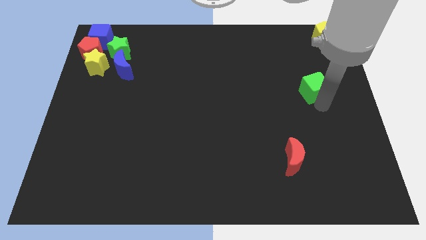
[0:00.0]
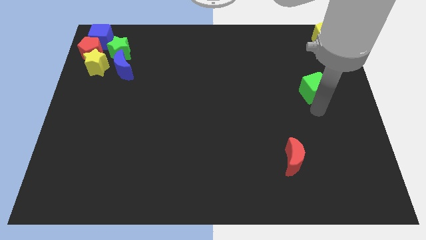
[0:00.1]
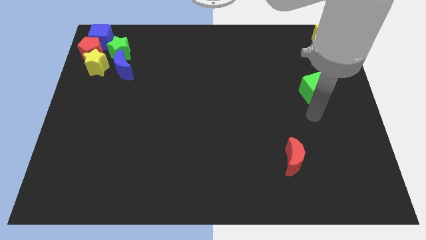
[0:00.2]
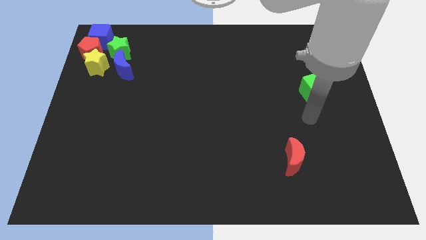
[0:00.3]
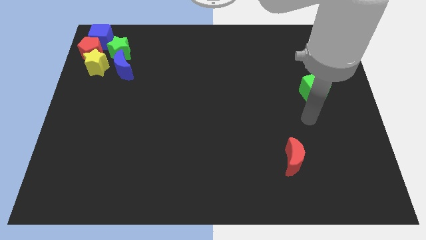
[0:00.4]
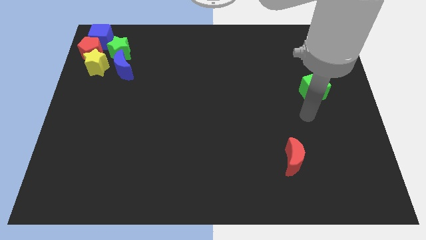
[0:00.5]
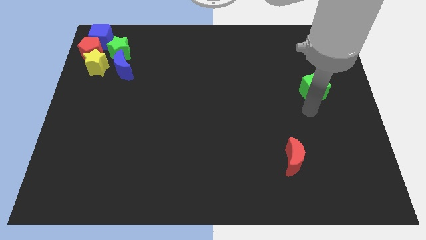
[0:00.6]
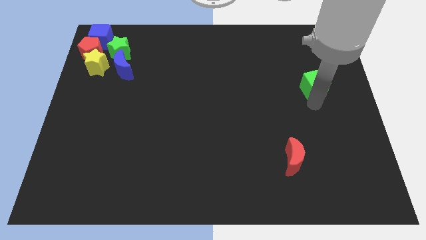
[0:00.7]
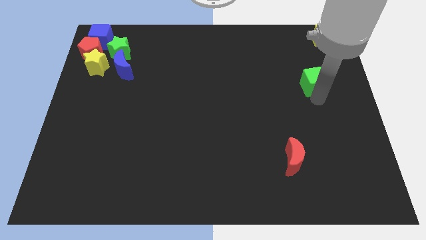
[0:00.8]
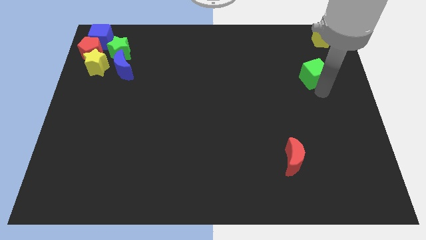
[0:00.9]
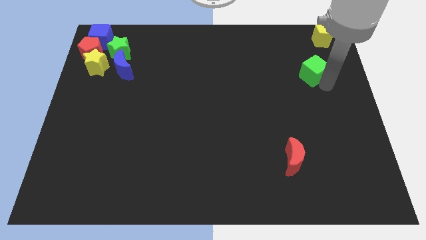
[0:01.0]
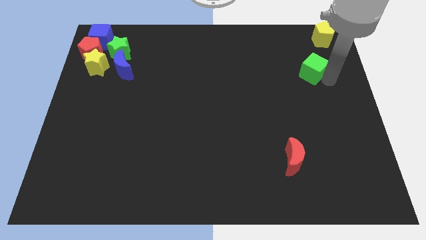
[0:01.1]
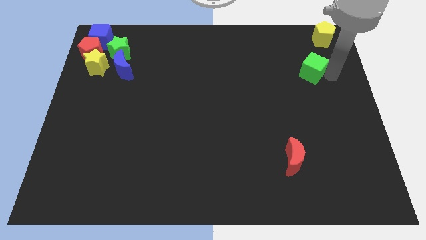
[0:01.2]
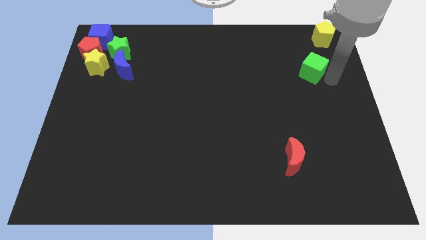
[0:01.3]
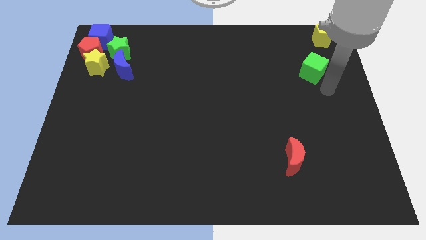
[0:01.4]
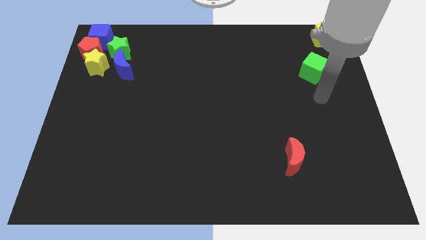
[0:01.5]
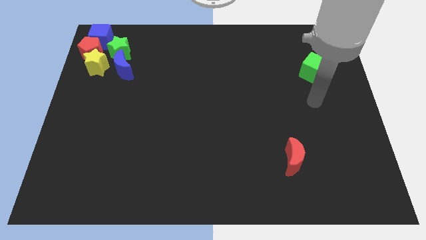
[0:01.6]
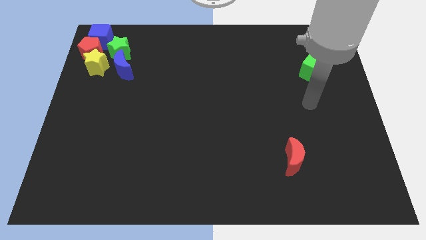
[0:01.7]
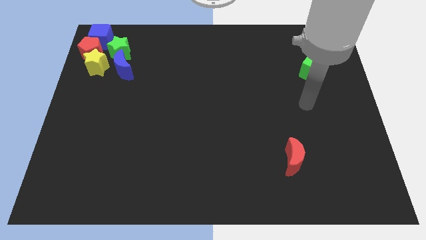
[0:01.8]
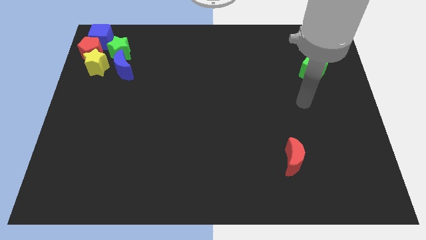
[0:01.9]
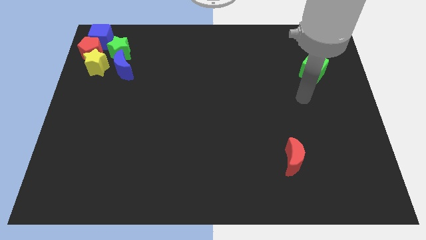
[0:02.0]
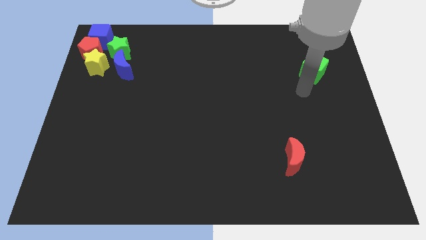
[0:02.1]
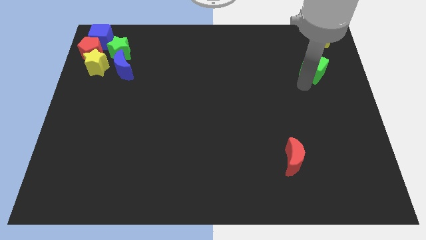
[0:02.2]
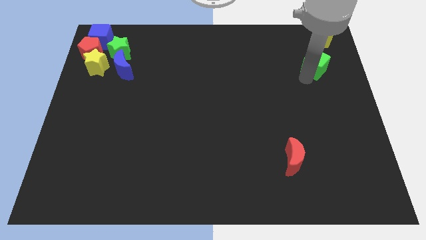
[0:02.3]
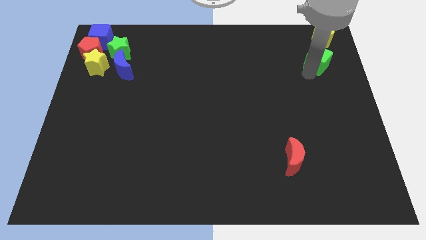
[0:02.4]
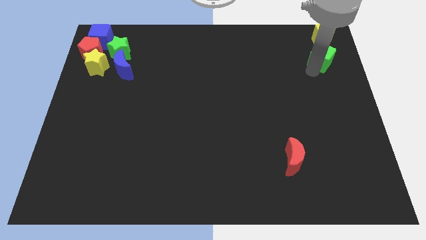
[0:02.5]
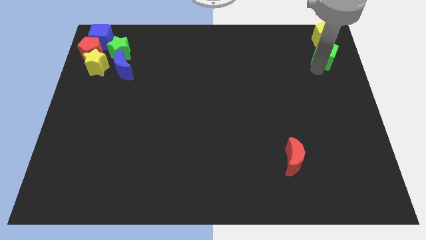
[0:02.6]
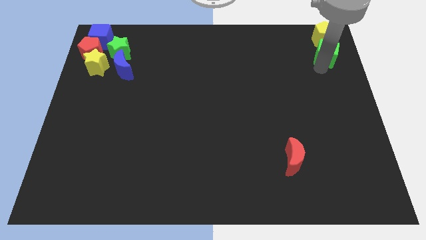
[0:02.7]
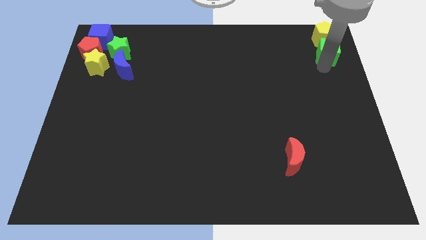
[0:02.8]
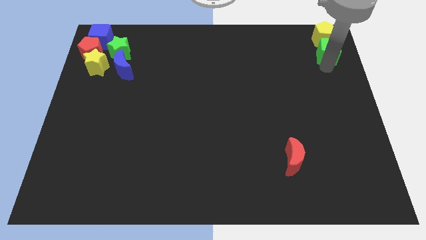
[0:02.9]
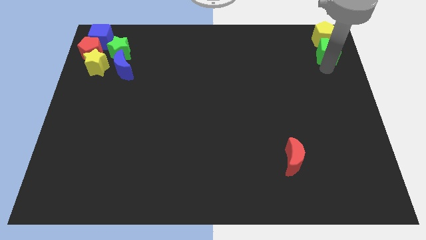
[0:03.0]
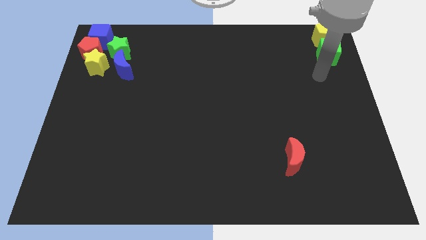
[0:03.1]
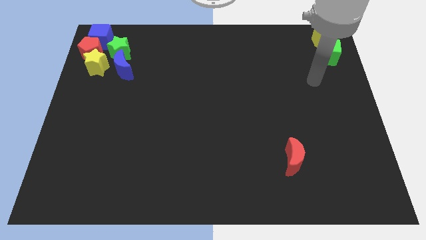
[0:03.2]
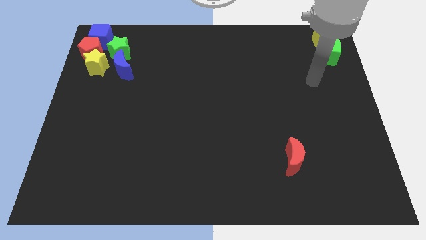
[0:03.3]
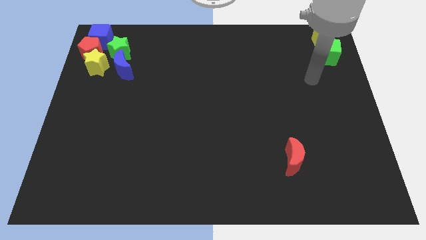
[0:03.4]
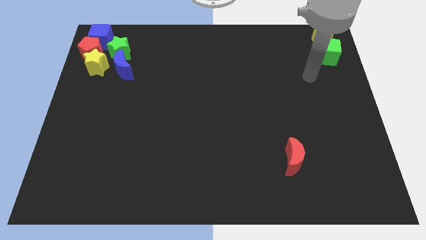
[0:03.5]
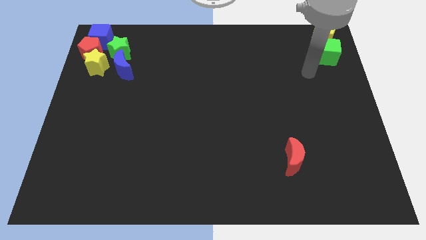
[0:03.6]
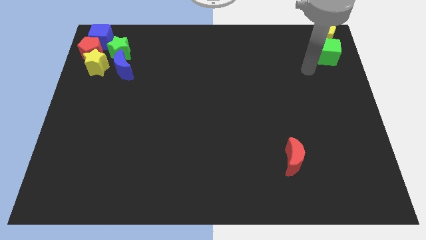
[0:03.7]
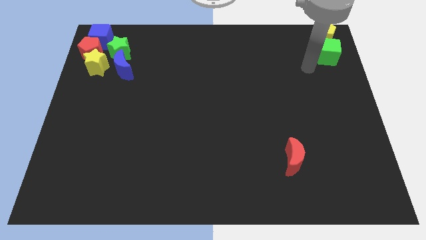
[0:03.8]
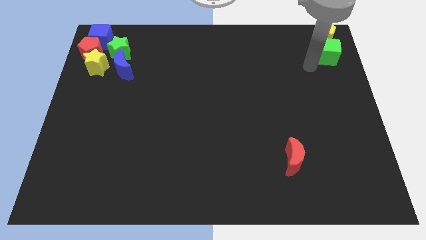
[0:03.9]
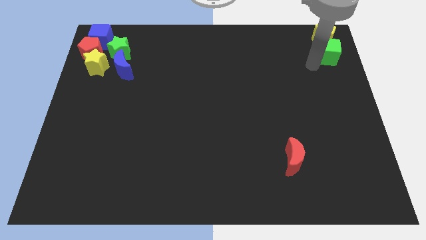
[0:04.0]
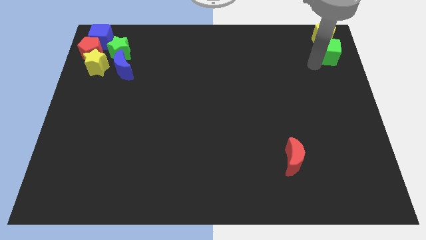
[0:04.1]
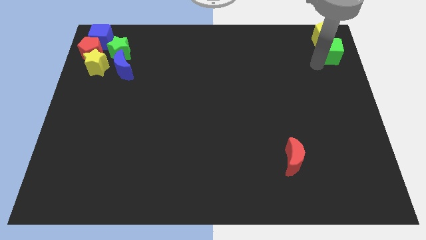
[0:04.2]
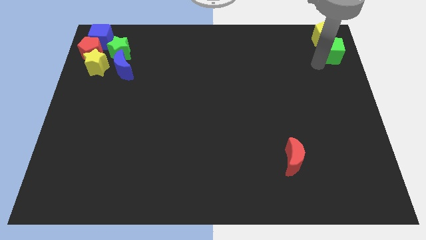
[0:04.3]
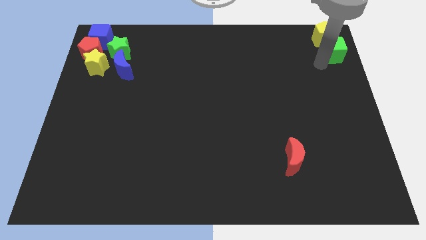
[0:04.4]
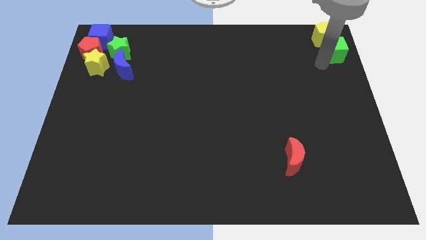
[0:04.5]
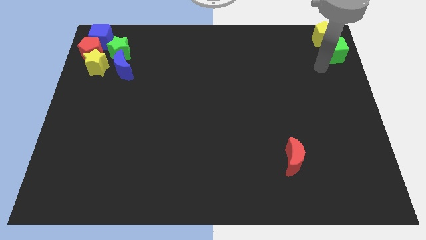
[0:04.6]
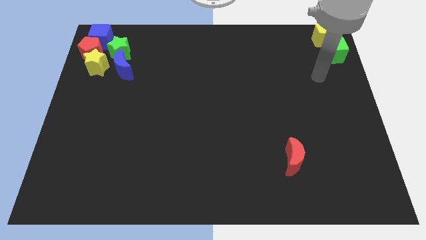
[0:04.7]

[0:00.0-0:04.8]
move the green cube to the top right

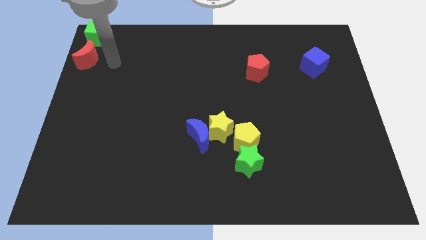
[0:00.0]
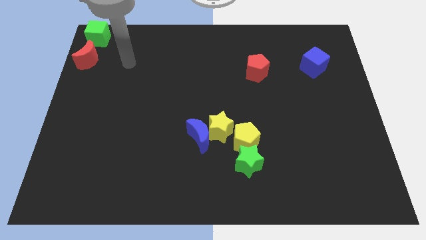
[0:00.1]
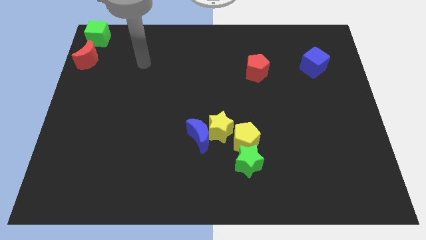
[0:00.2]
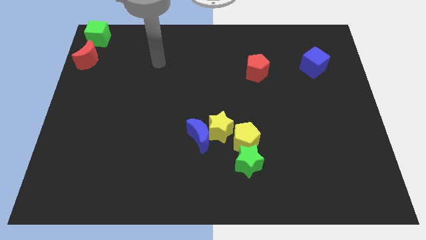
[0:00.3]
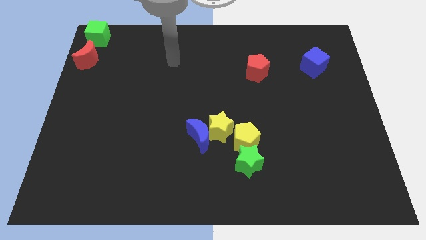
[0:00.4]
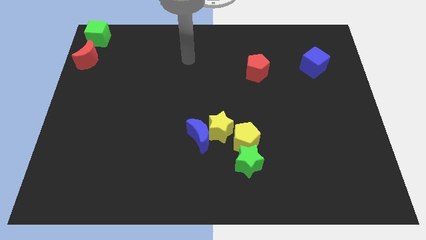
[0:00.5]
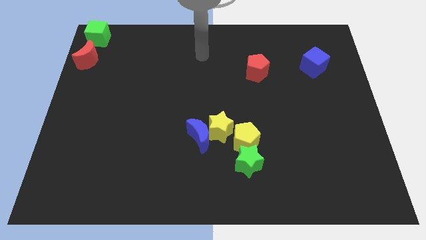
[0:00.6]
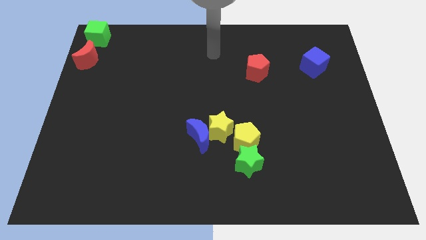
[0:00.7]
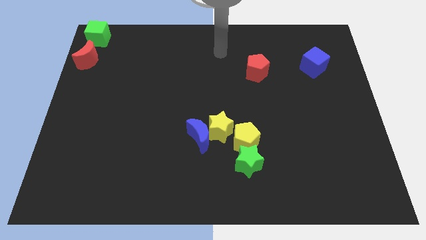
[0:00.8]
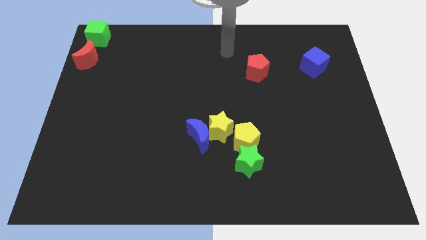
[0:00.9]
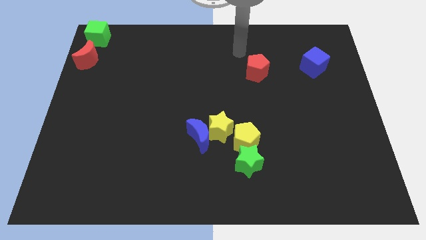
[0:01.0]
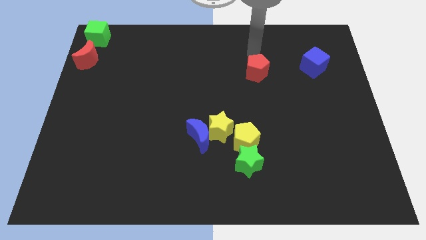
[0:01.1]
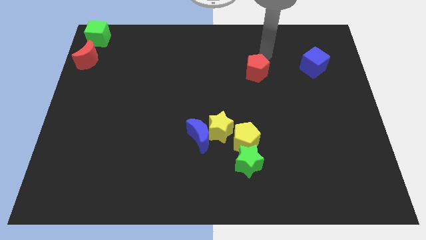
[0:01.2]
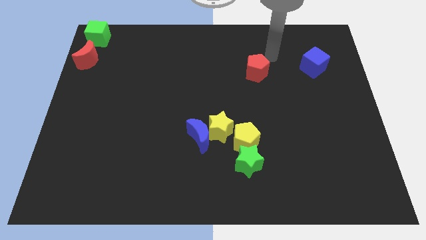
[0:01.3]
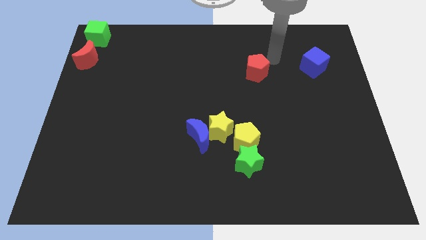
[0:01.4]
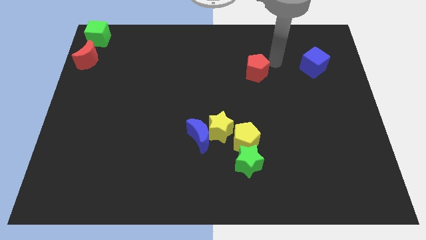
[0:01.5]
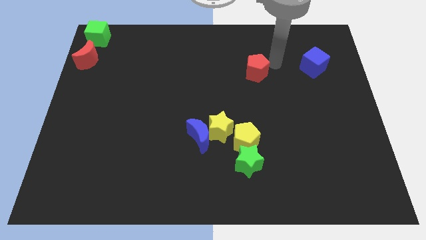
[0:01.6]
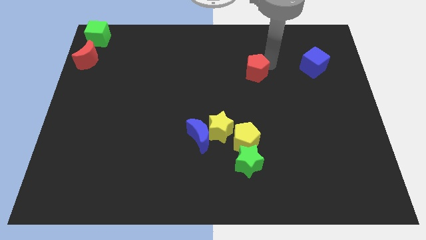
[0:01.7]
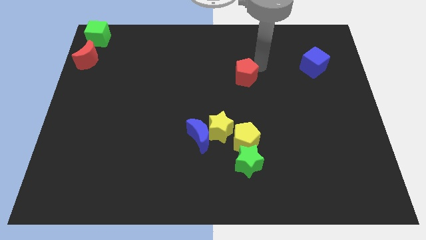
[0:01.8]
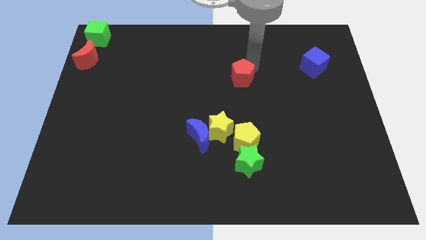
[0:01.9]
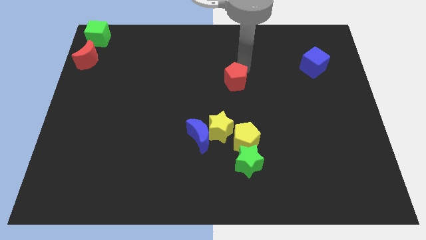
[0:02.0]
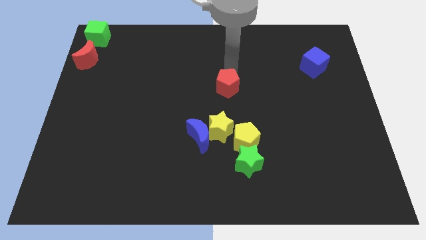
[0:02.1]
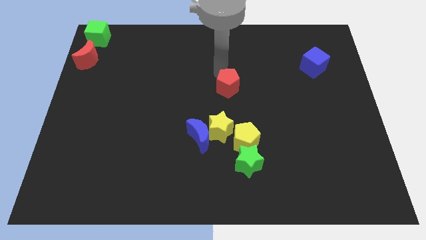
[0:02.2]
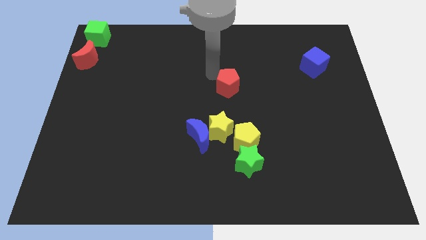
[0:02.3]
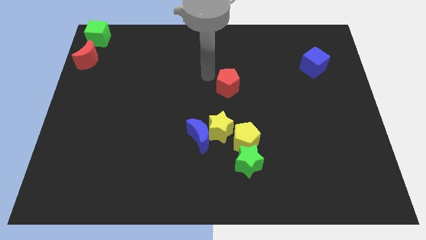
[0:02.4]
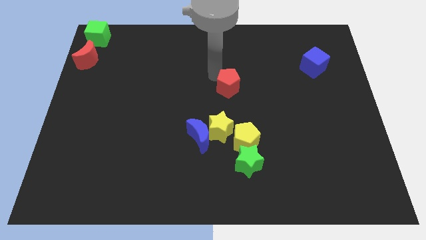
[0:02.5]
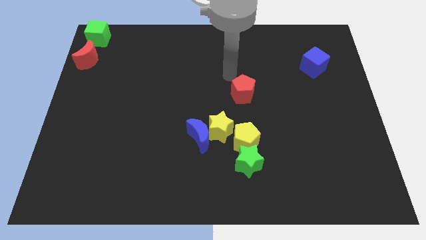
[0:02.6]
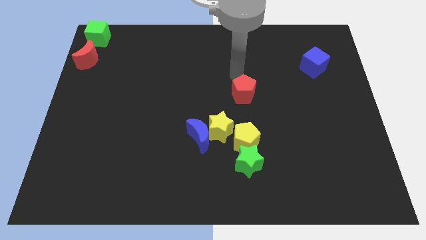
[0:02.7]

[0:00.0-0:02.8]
push the red pentagon to the top of the yellow pentagon

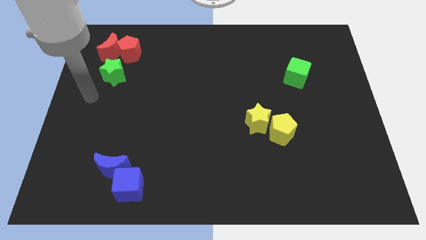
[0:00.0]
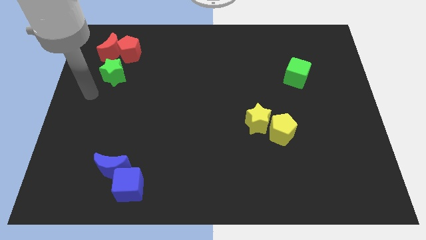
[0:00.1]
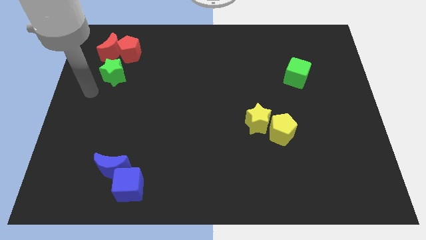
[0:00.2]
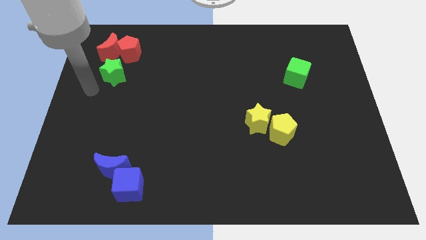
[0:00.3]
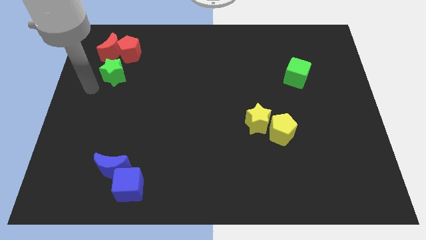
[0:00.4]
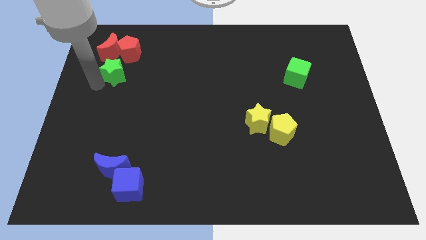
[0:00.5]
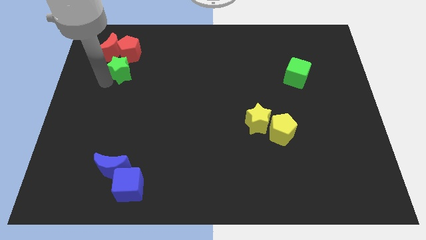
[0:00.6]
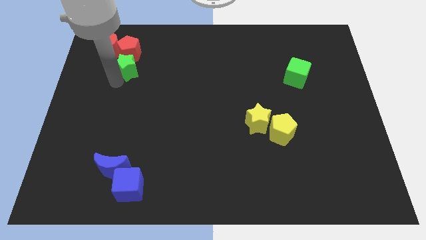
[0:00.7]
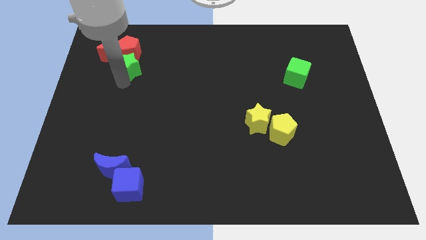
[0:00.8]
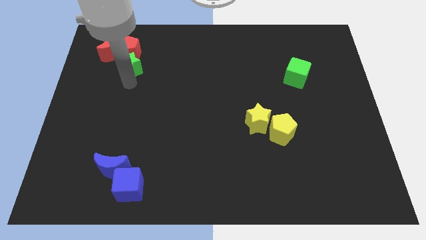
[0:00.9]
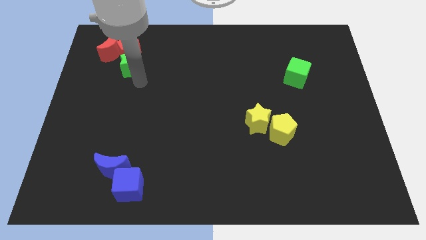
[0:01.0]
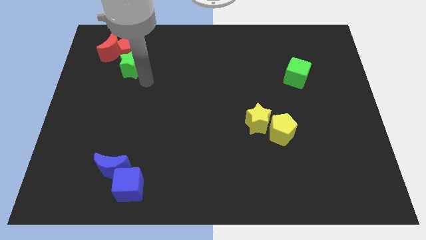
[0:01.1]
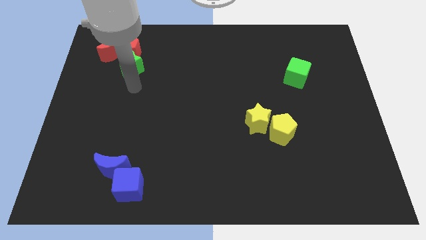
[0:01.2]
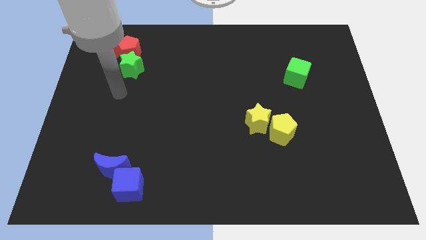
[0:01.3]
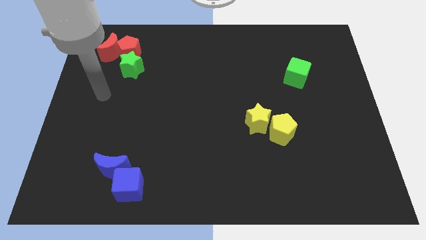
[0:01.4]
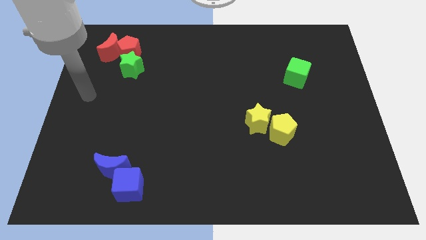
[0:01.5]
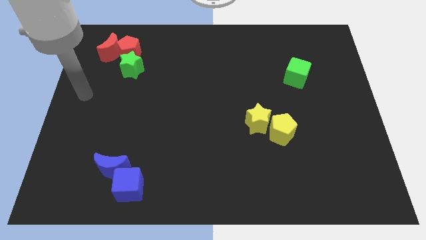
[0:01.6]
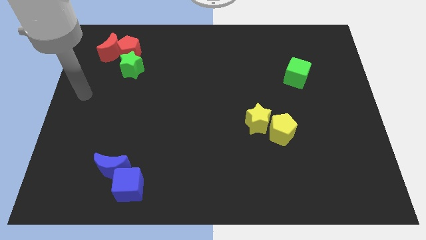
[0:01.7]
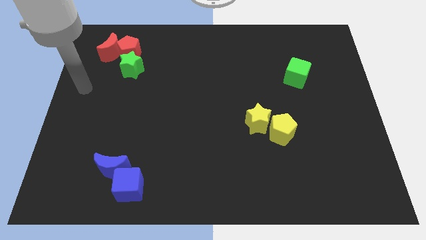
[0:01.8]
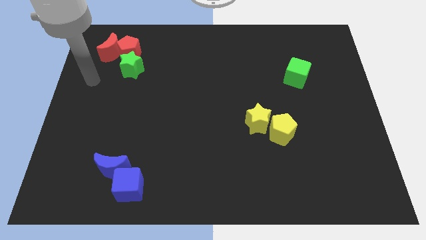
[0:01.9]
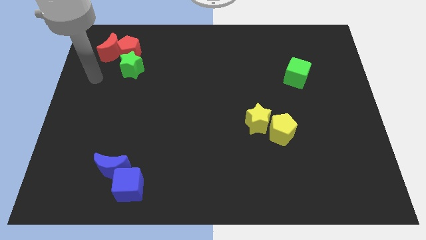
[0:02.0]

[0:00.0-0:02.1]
place the green star at the bottom of red pentagon
